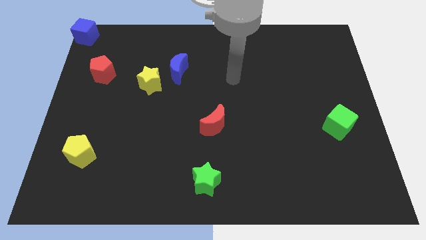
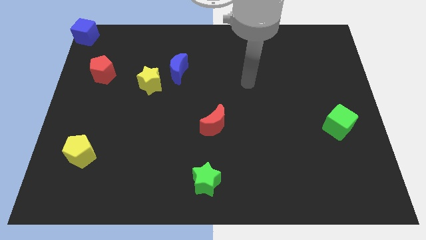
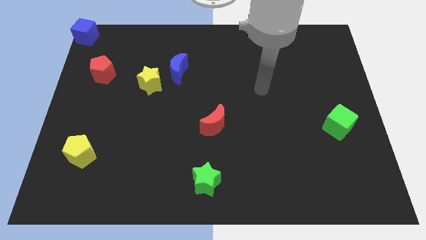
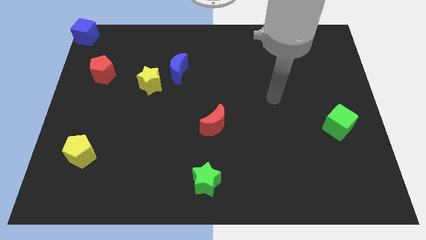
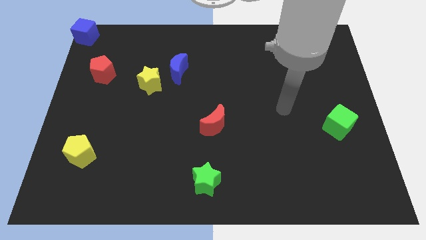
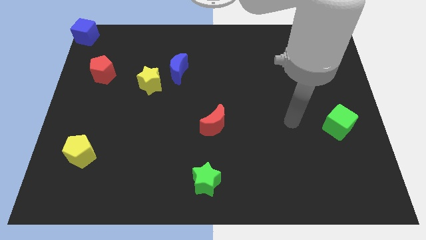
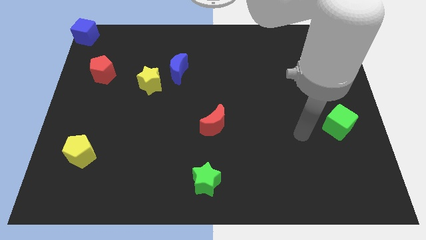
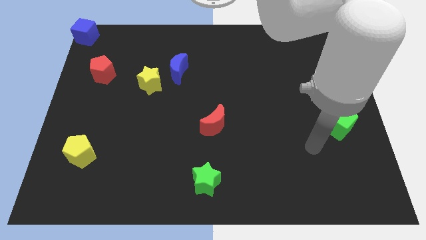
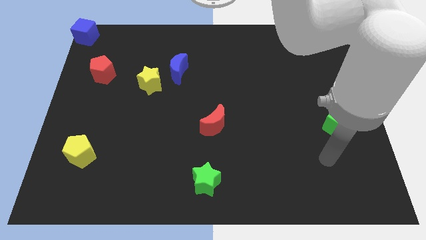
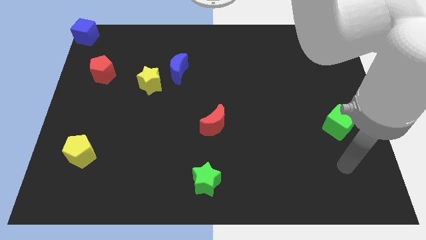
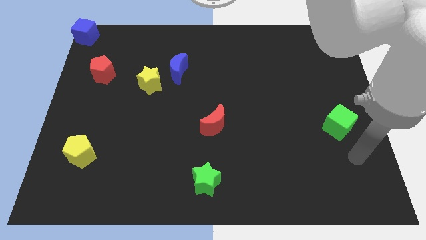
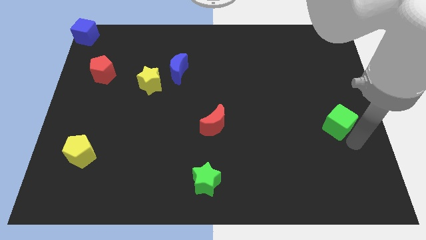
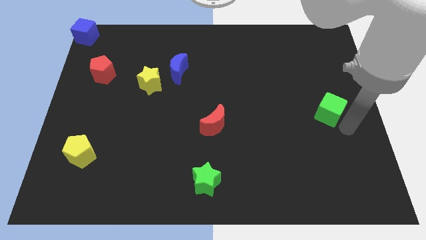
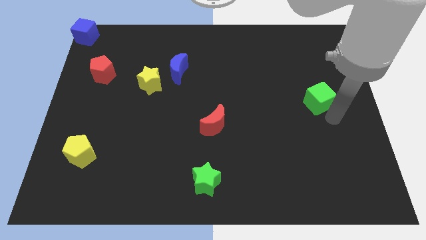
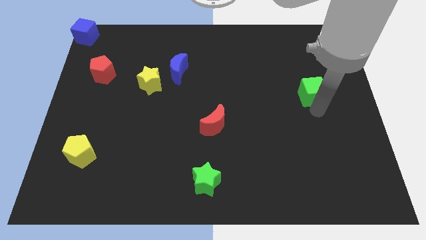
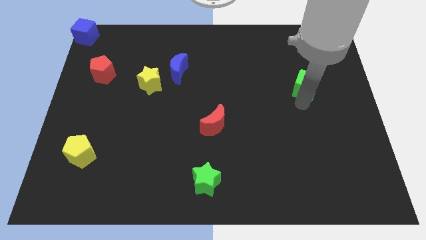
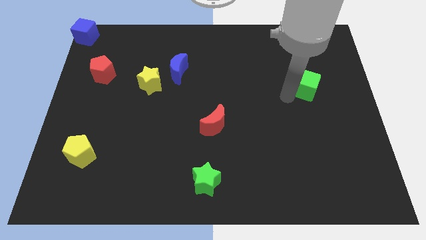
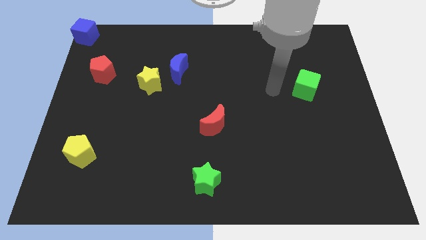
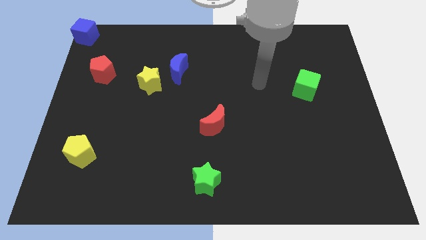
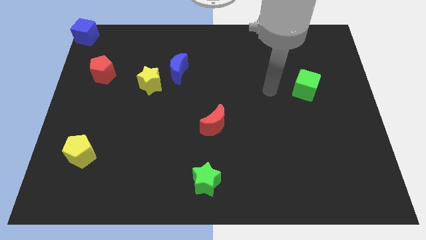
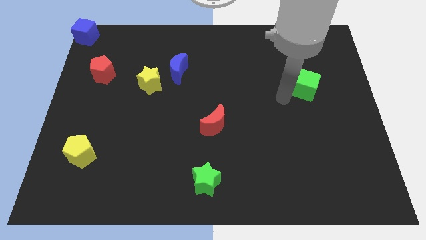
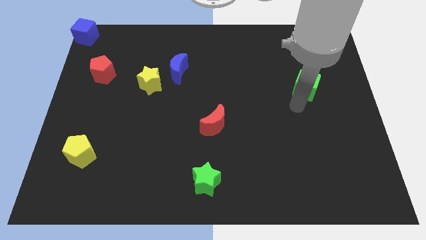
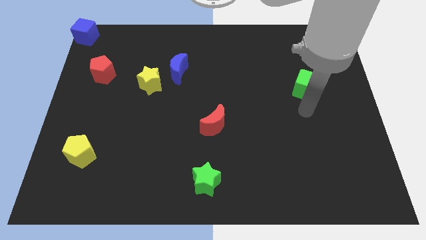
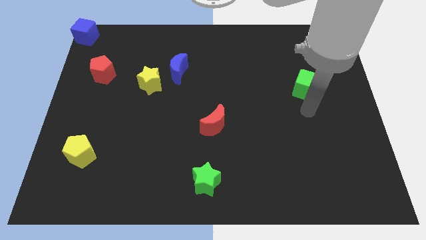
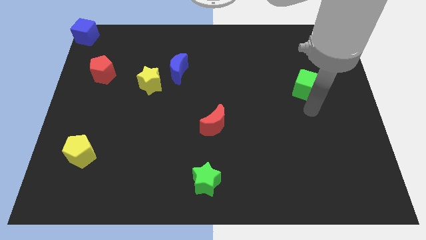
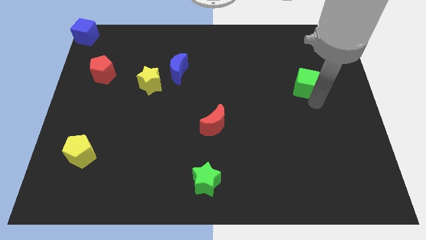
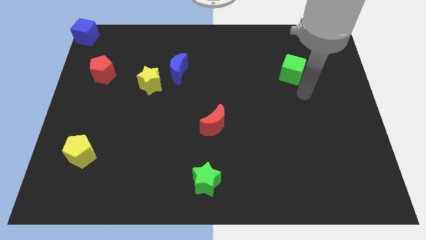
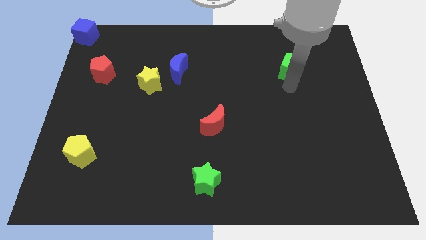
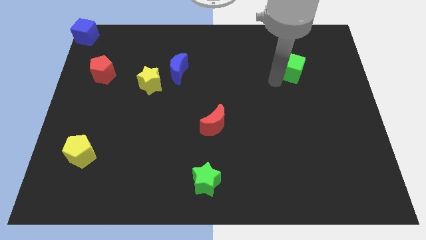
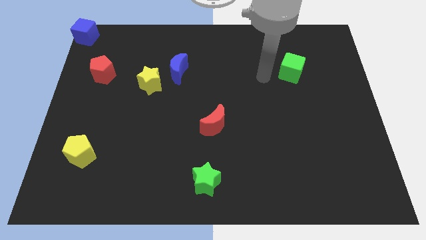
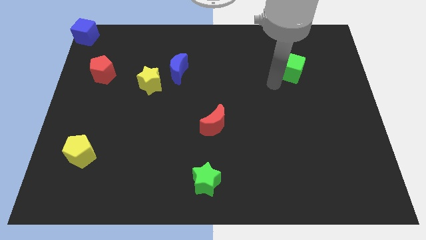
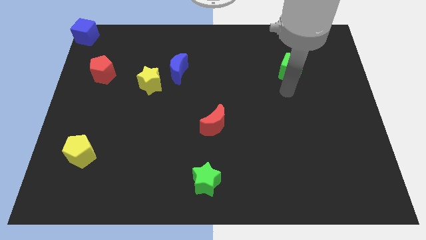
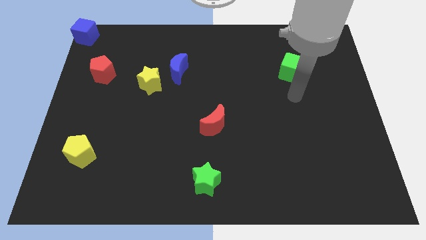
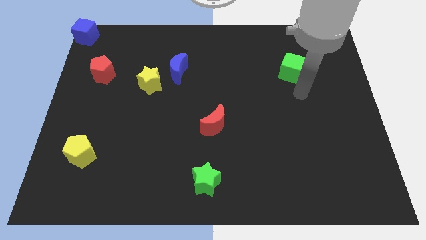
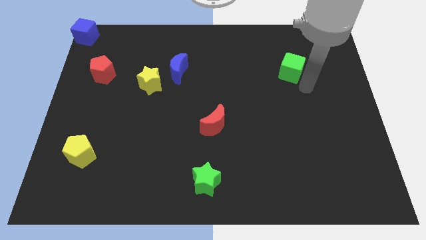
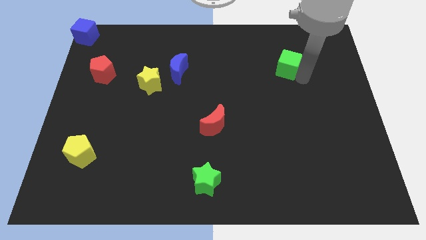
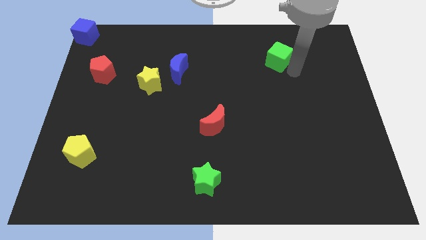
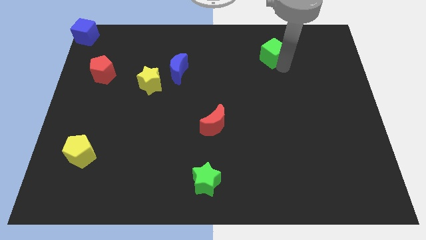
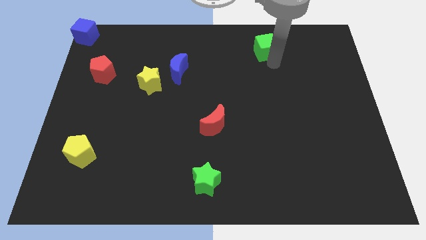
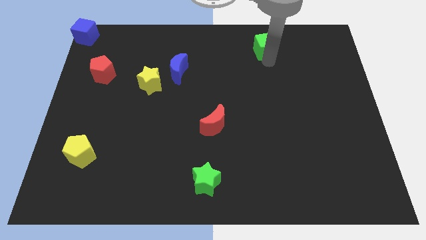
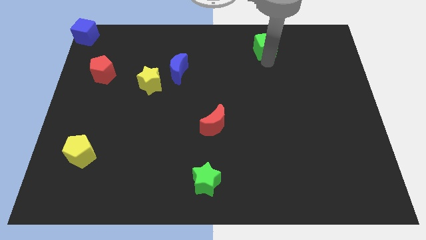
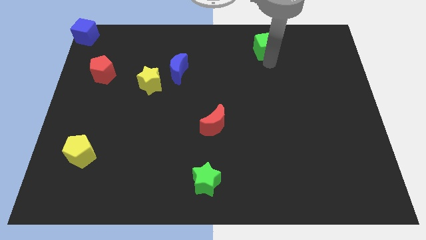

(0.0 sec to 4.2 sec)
place the green cube at the top of the red moon

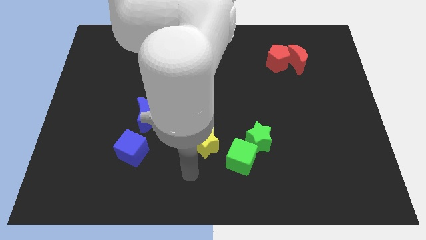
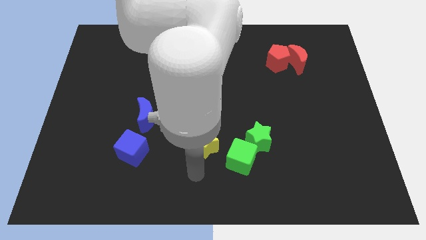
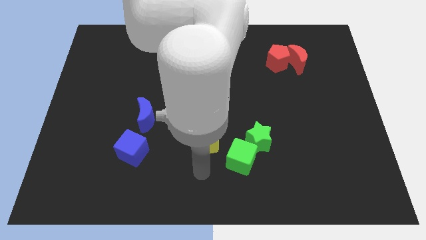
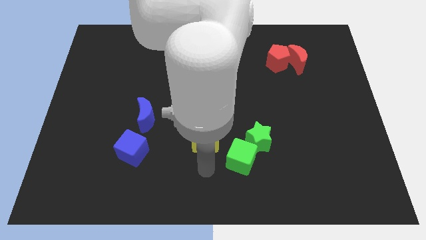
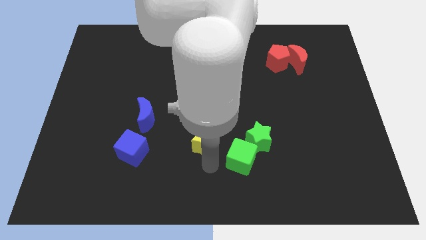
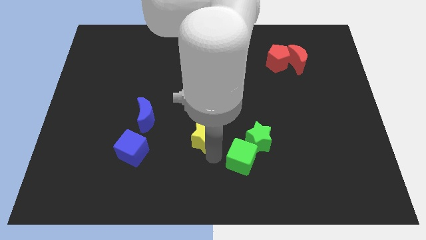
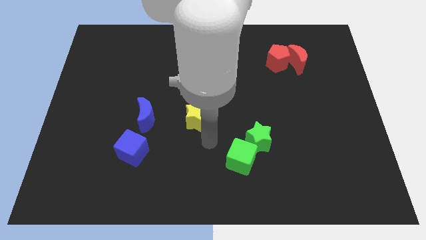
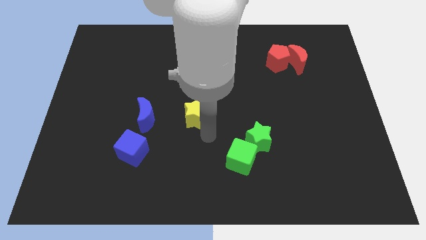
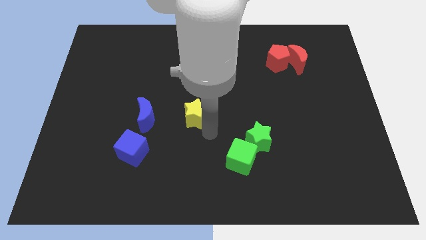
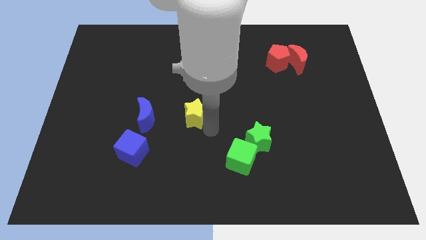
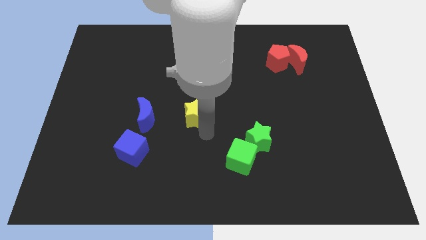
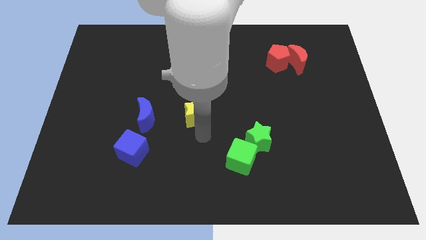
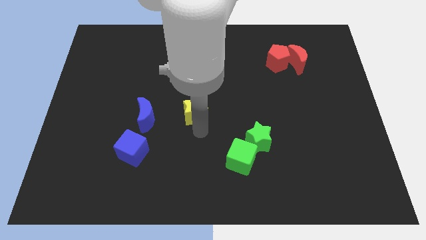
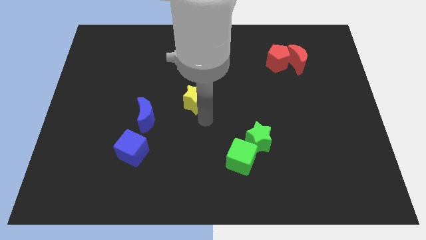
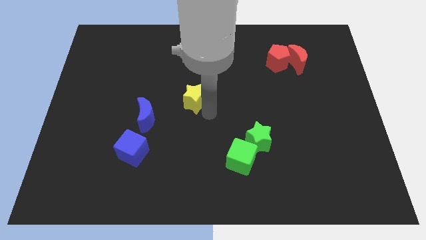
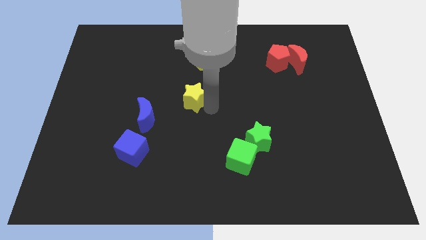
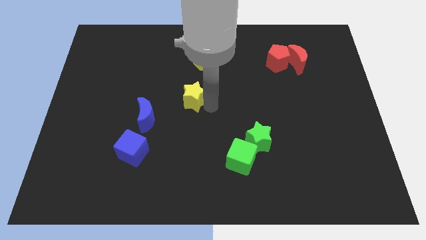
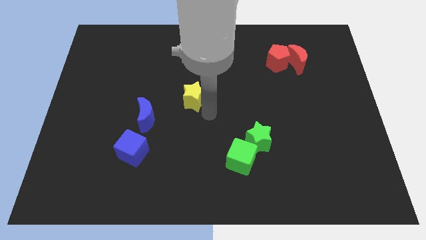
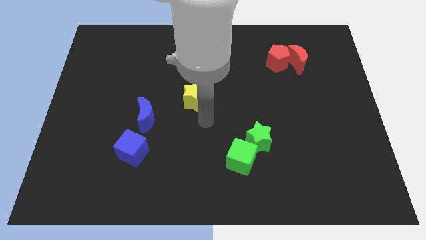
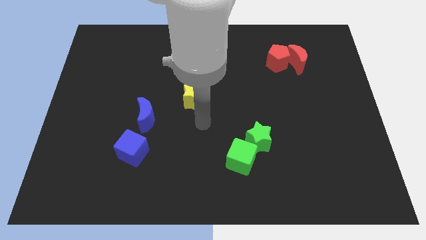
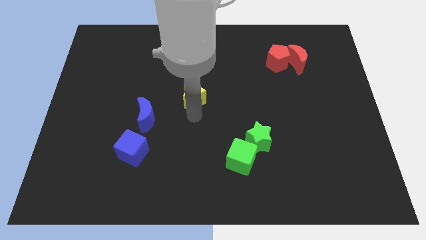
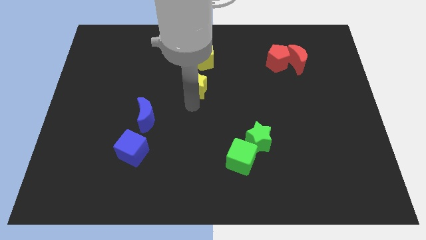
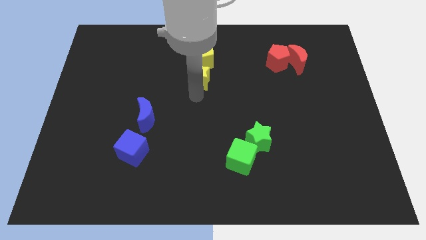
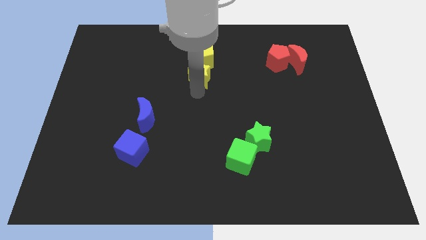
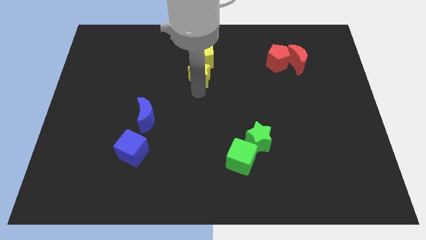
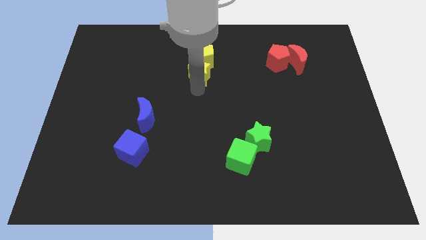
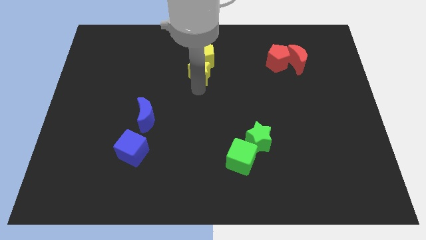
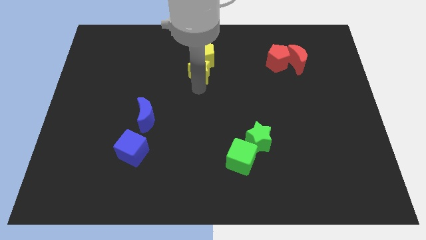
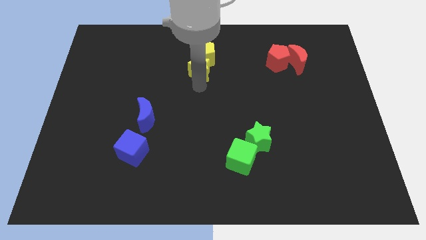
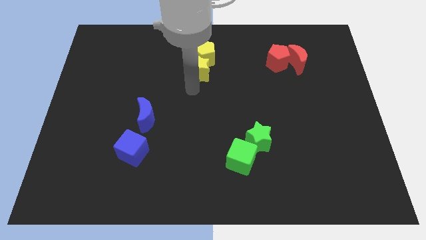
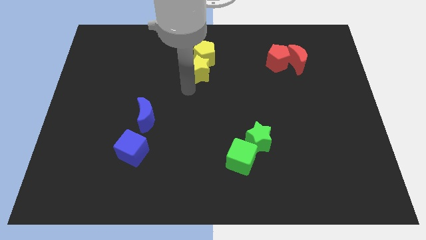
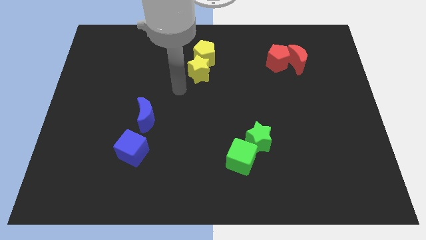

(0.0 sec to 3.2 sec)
move the yellow star to the bottom of yellow pentagon

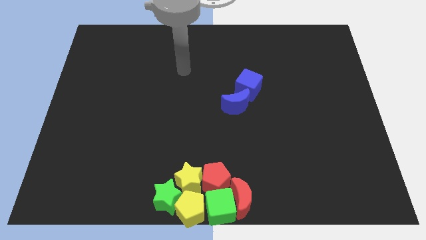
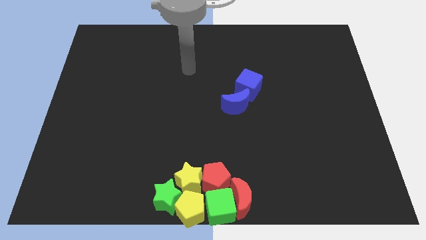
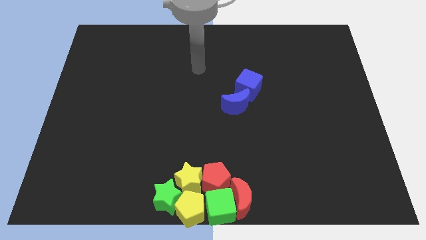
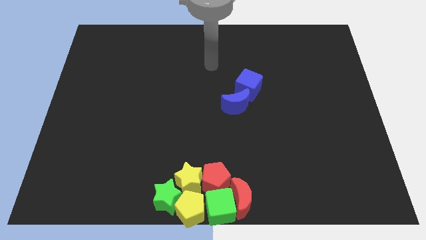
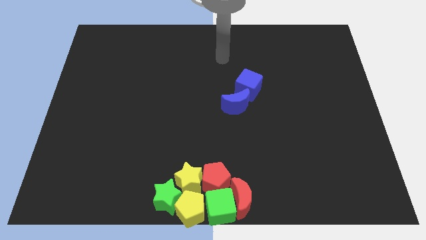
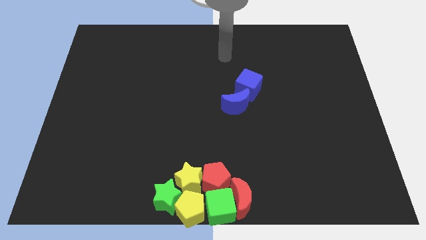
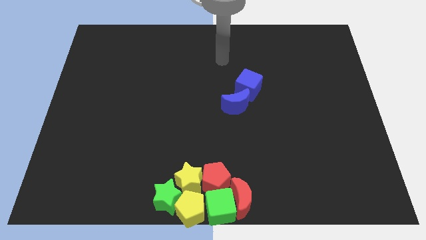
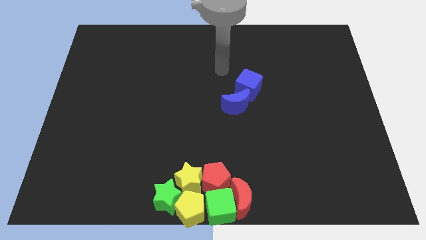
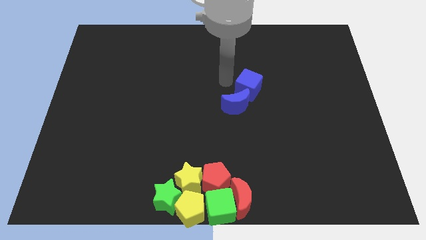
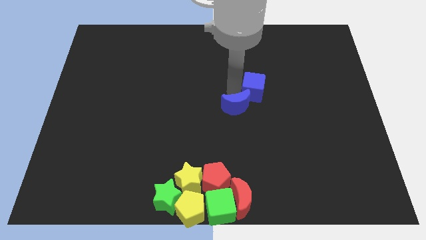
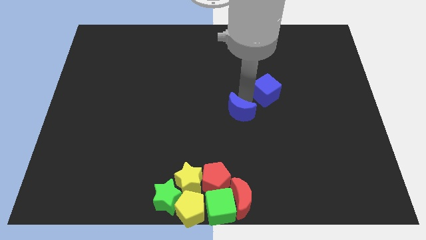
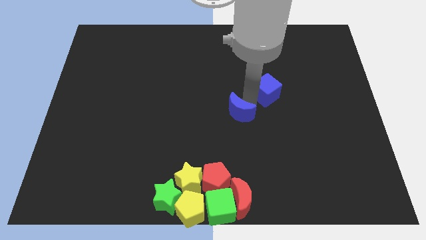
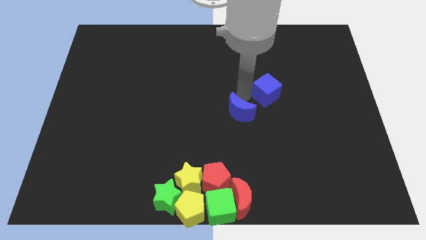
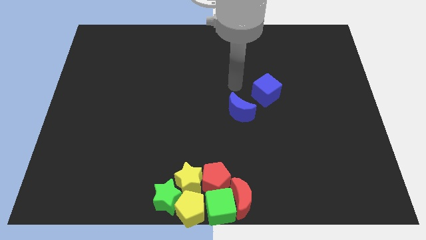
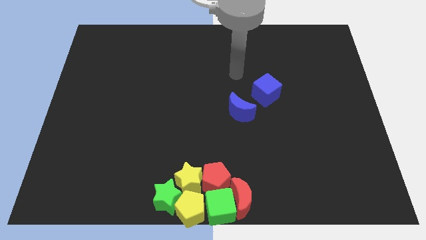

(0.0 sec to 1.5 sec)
separate blue cube from blue moon
